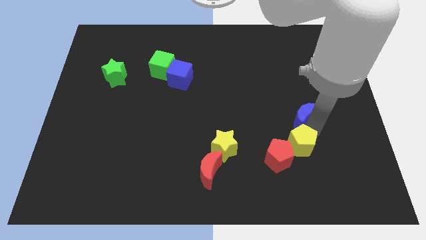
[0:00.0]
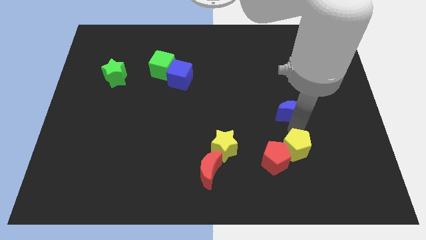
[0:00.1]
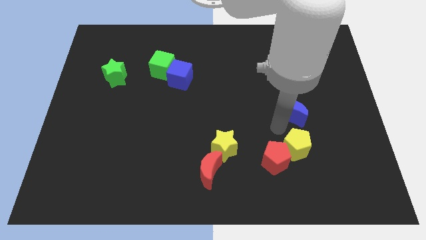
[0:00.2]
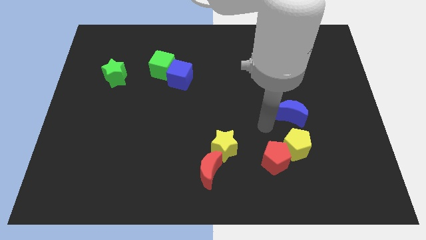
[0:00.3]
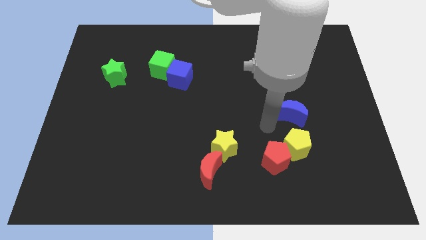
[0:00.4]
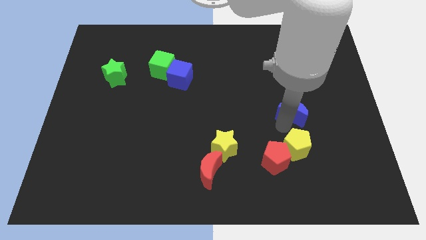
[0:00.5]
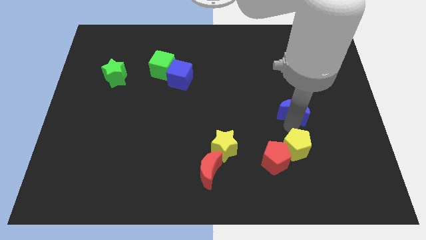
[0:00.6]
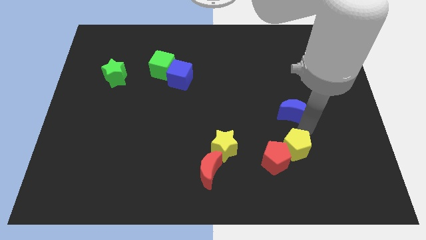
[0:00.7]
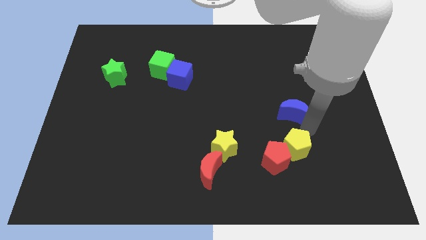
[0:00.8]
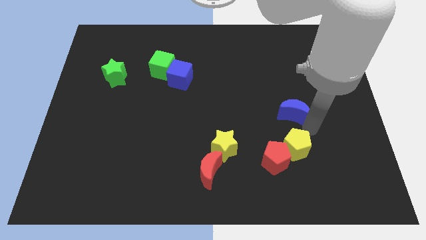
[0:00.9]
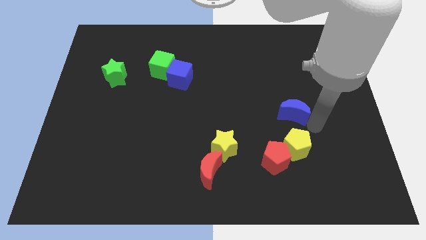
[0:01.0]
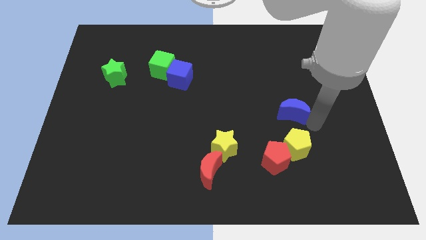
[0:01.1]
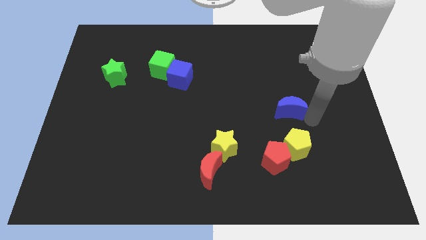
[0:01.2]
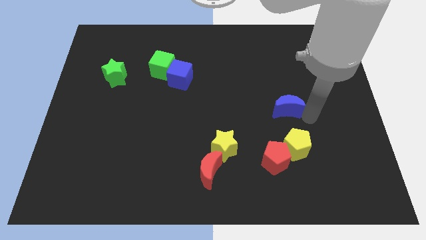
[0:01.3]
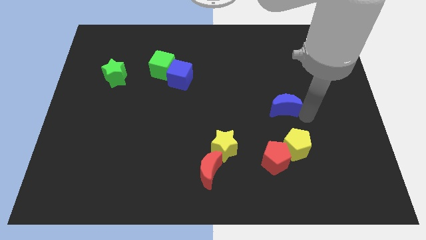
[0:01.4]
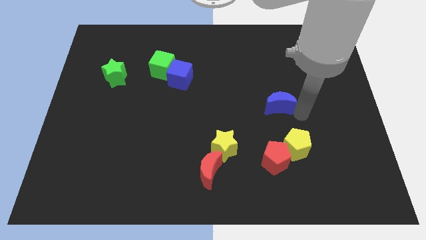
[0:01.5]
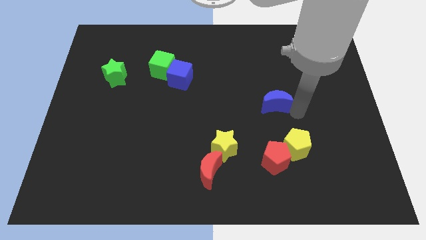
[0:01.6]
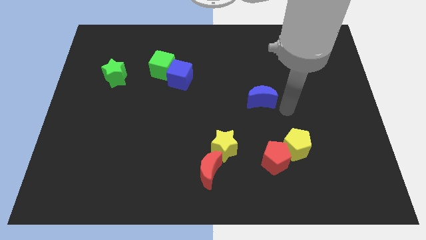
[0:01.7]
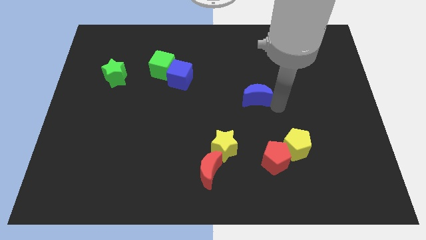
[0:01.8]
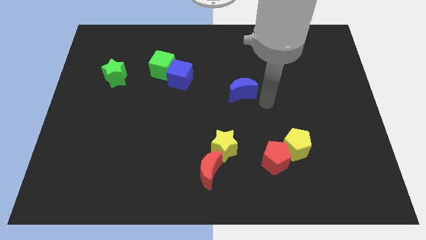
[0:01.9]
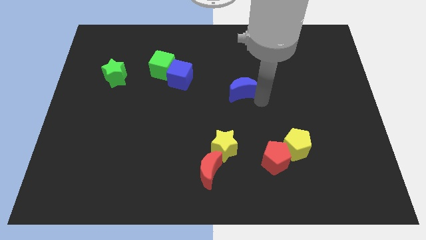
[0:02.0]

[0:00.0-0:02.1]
separate blue moon from yellow pentagon

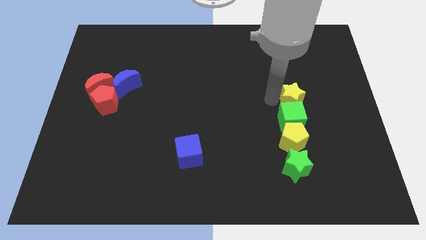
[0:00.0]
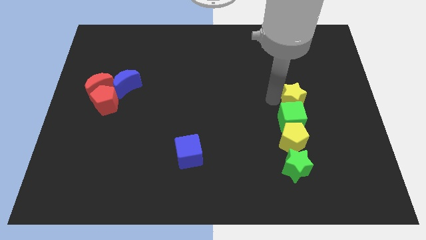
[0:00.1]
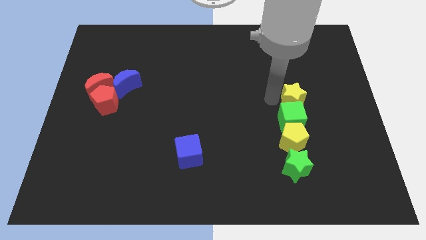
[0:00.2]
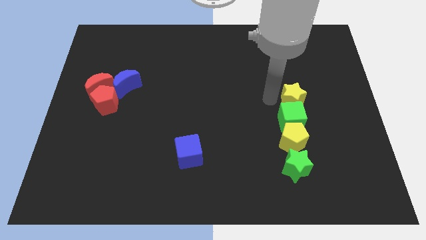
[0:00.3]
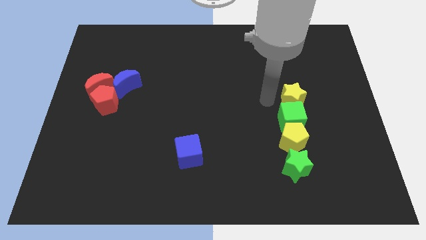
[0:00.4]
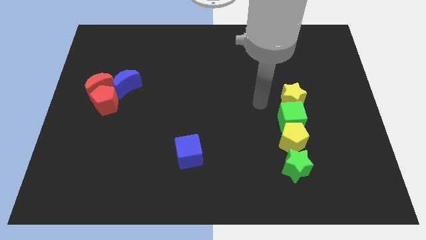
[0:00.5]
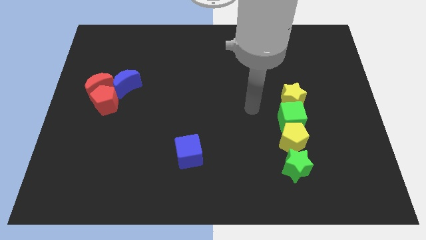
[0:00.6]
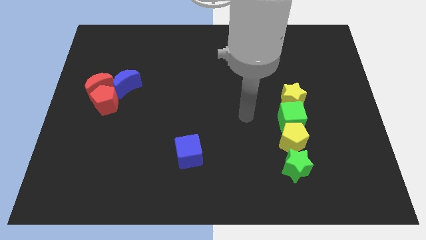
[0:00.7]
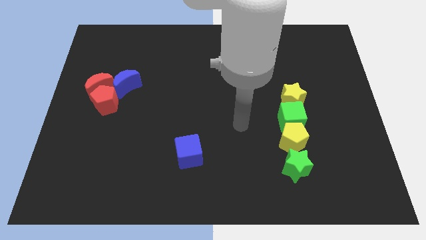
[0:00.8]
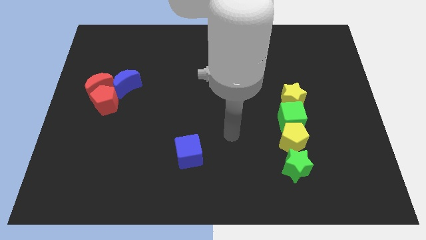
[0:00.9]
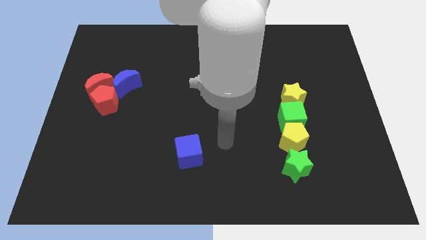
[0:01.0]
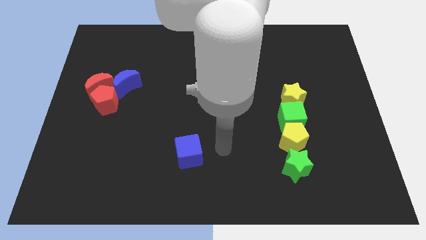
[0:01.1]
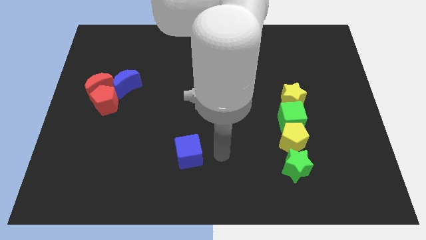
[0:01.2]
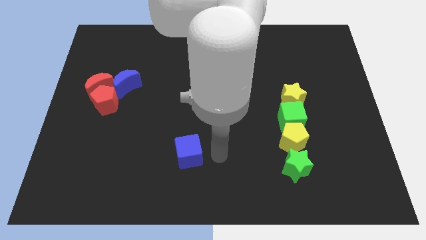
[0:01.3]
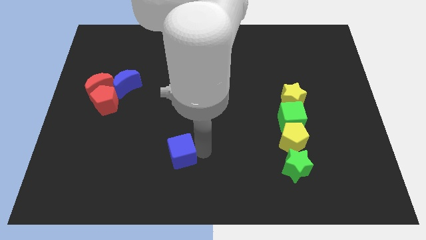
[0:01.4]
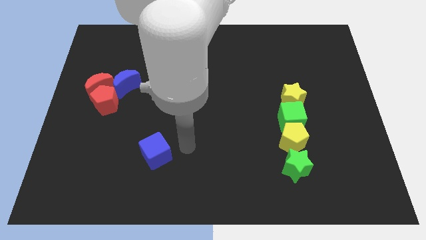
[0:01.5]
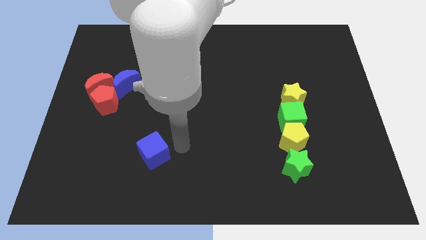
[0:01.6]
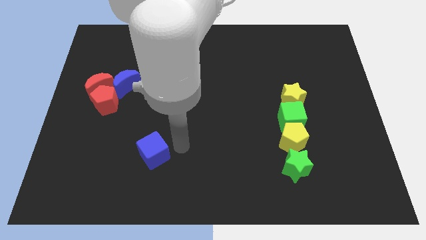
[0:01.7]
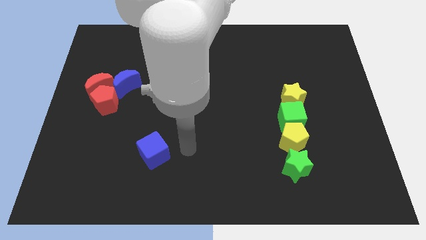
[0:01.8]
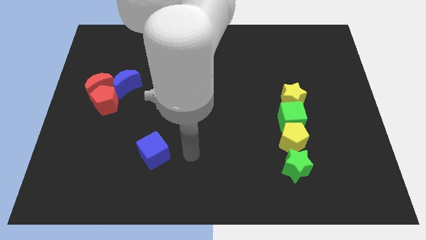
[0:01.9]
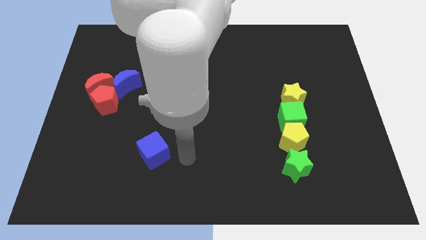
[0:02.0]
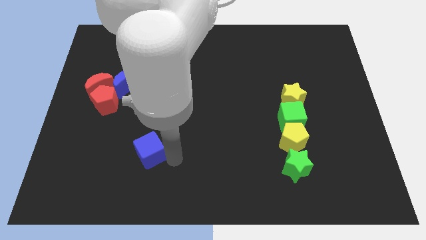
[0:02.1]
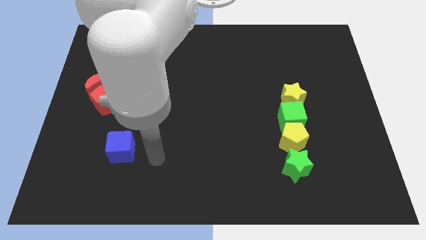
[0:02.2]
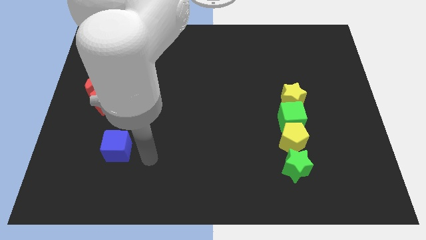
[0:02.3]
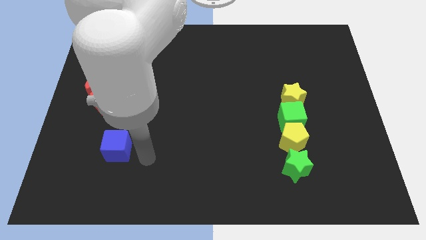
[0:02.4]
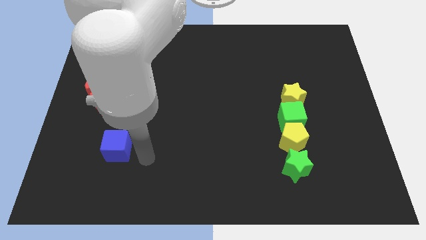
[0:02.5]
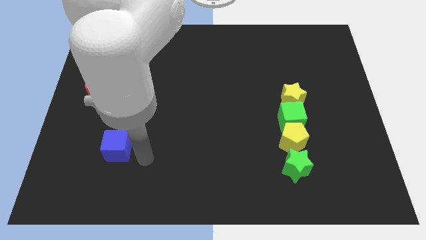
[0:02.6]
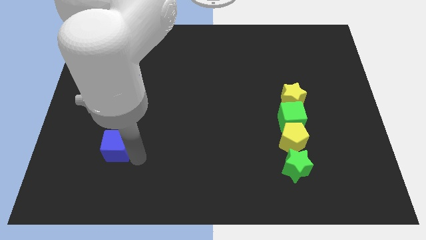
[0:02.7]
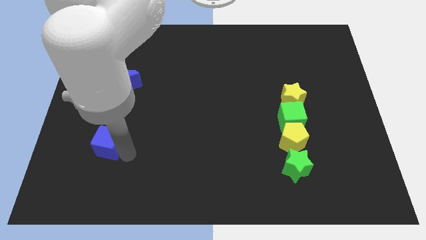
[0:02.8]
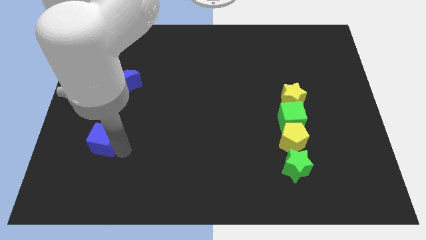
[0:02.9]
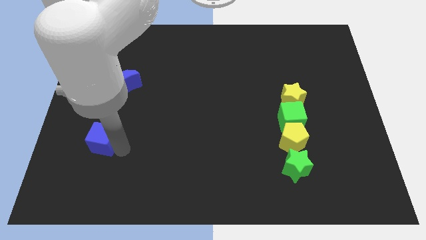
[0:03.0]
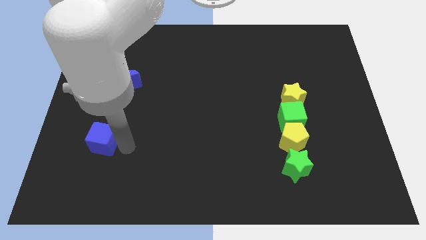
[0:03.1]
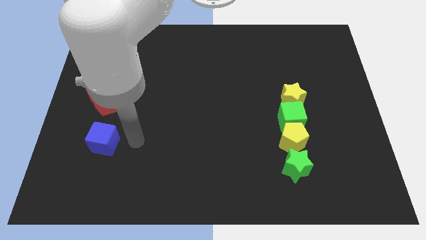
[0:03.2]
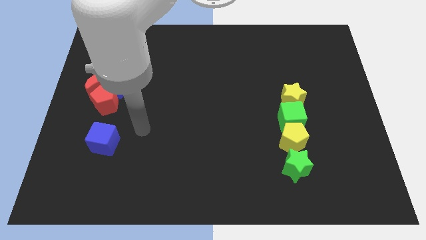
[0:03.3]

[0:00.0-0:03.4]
move the blue cube bottom to the red pentagon

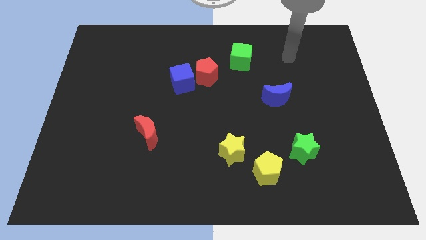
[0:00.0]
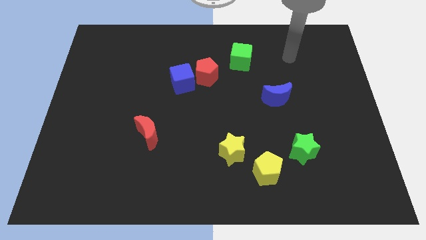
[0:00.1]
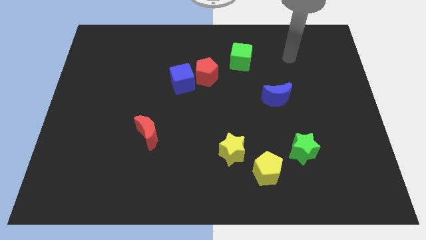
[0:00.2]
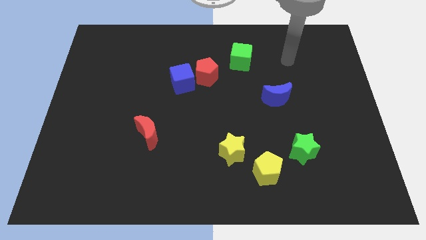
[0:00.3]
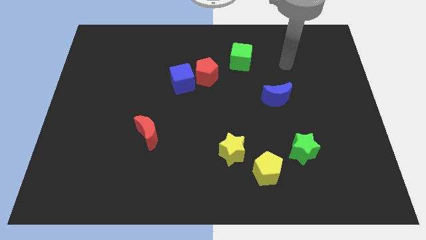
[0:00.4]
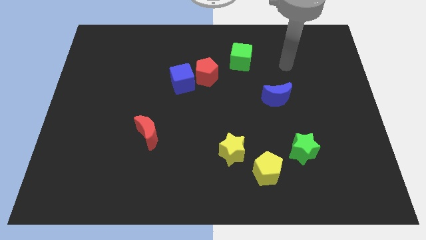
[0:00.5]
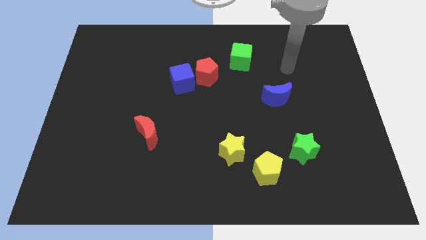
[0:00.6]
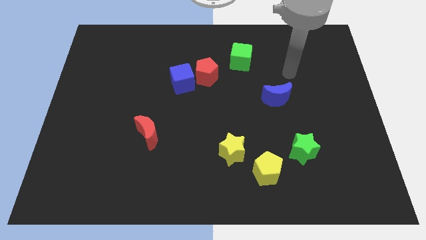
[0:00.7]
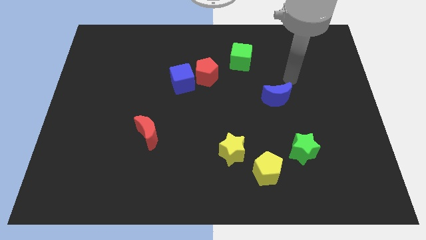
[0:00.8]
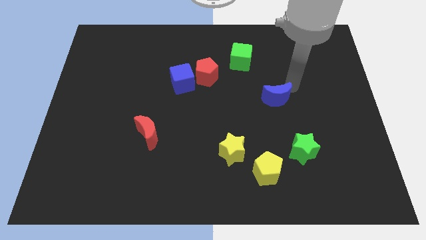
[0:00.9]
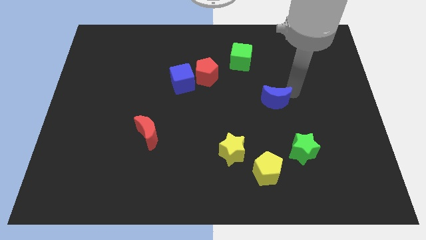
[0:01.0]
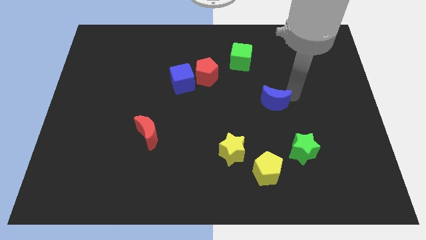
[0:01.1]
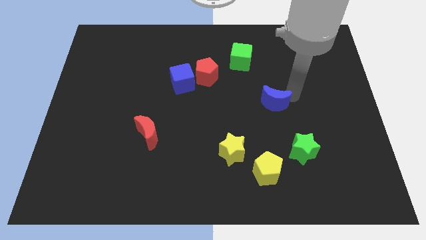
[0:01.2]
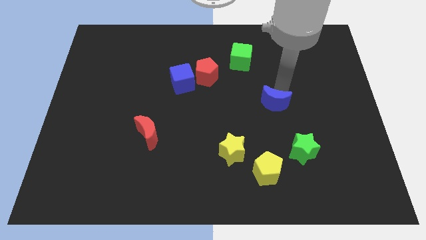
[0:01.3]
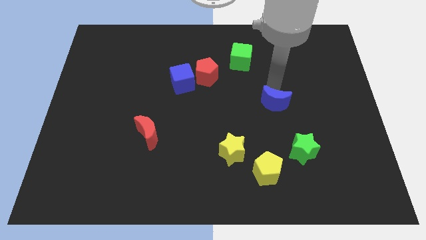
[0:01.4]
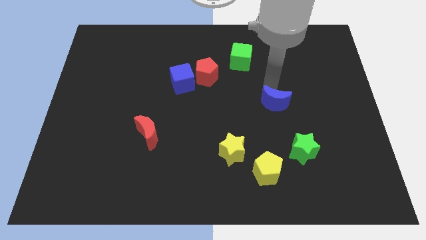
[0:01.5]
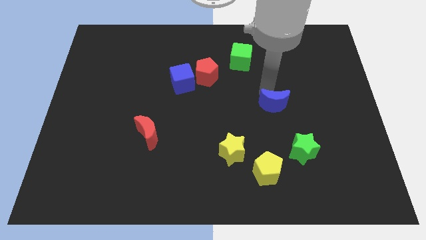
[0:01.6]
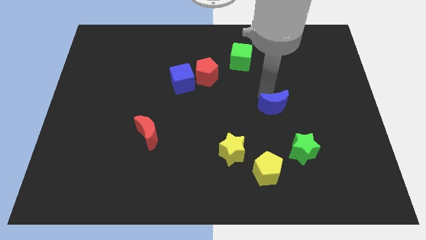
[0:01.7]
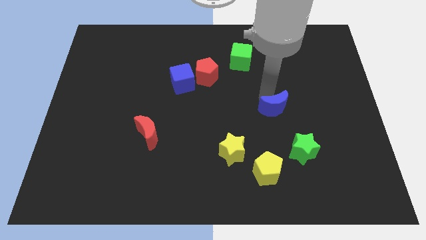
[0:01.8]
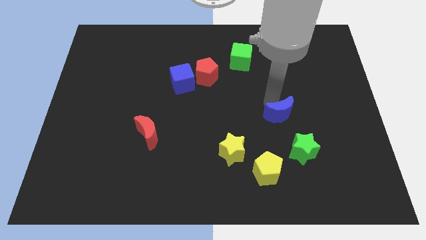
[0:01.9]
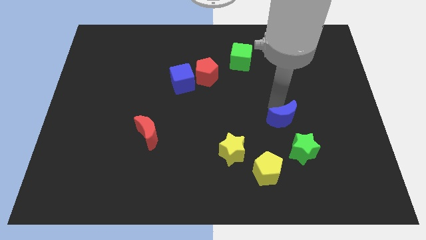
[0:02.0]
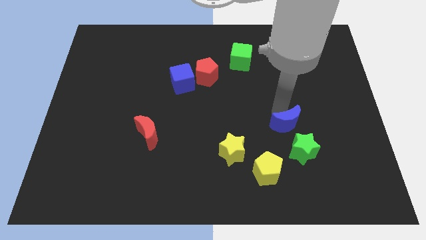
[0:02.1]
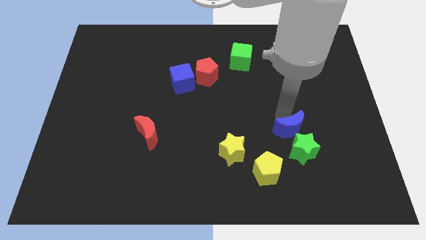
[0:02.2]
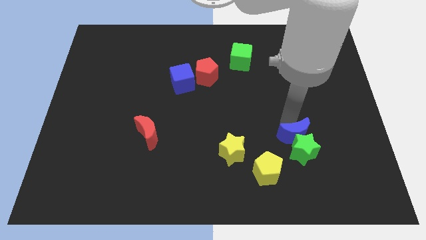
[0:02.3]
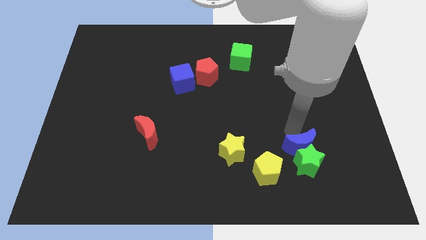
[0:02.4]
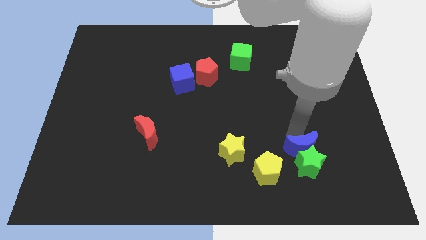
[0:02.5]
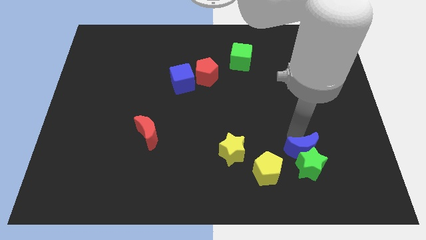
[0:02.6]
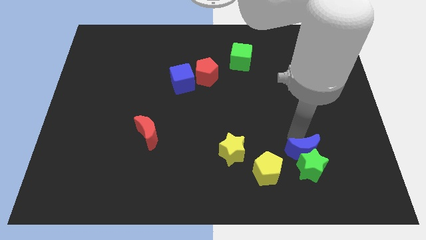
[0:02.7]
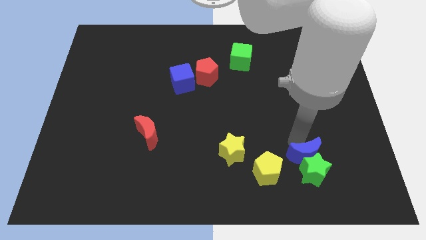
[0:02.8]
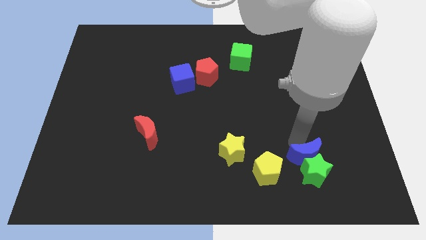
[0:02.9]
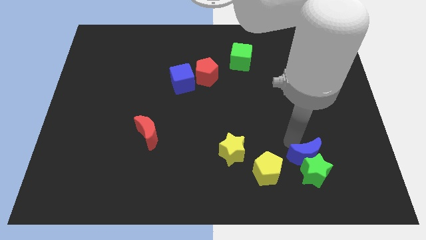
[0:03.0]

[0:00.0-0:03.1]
move the blue crescent into the green star

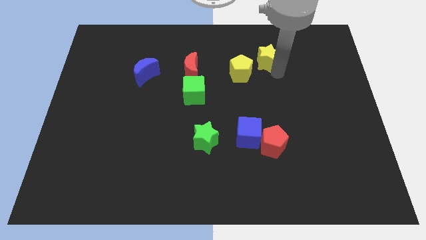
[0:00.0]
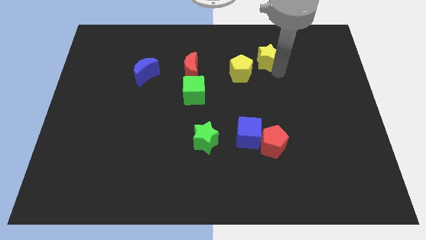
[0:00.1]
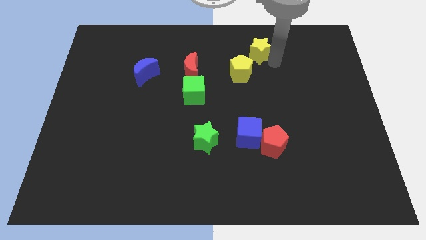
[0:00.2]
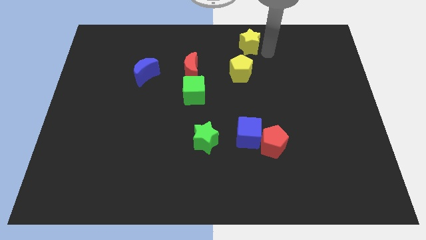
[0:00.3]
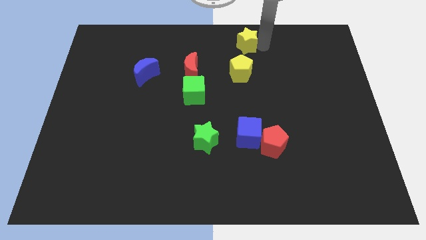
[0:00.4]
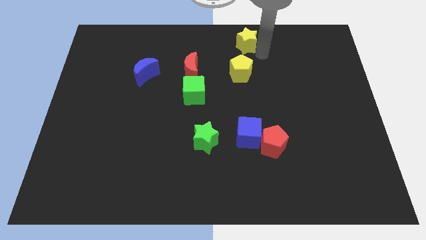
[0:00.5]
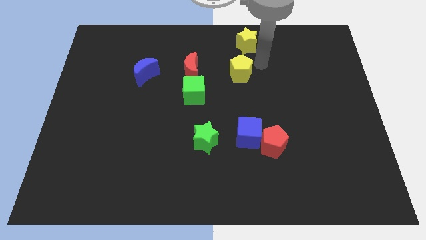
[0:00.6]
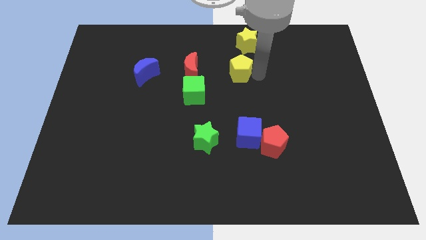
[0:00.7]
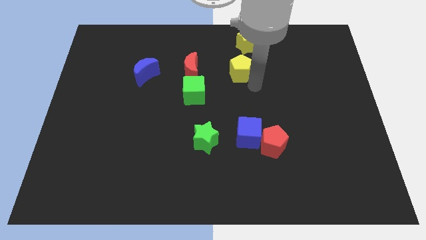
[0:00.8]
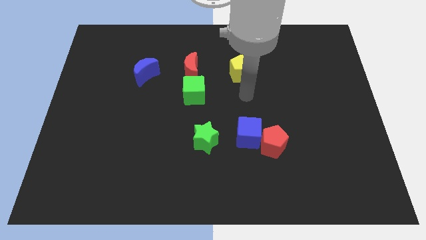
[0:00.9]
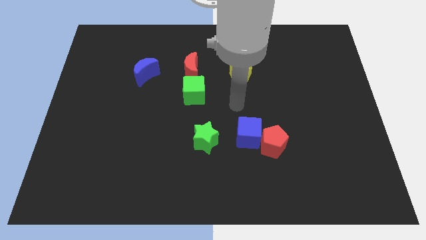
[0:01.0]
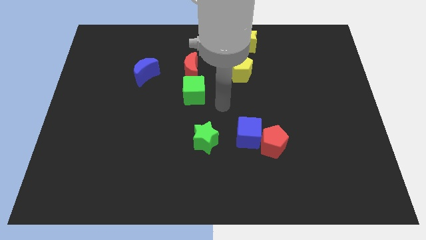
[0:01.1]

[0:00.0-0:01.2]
move the yellow star above the yellow pentagon
